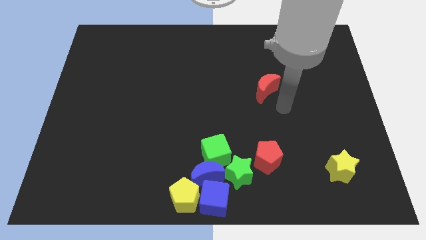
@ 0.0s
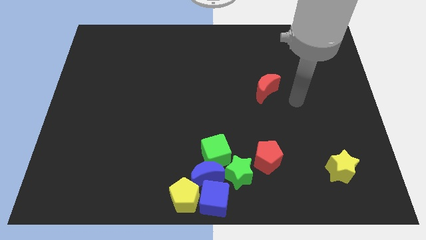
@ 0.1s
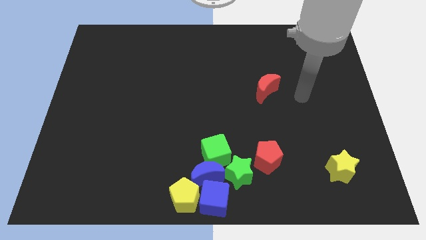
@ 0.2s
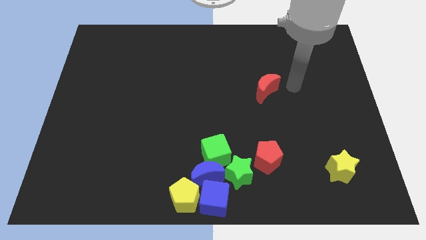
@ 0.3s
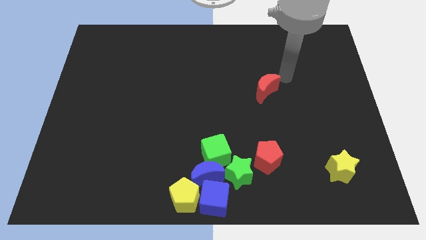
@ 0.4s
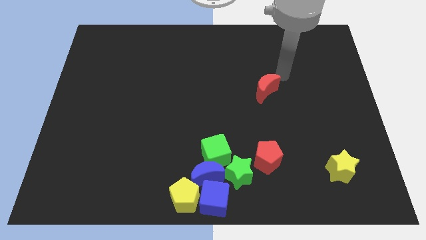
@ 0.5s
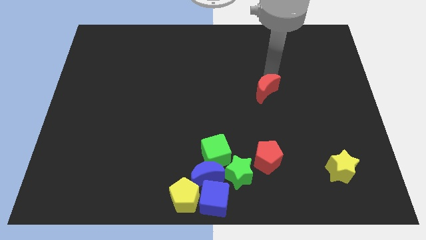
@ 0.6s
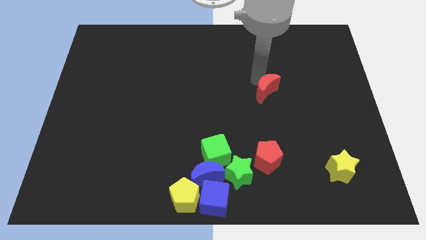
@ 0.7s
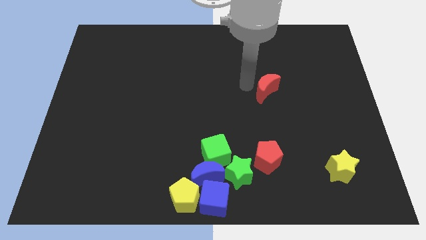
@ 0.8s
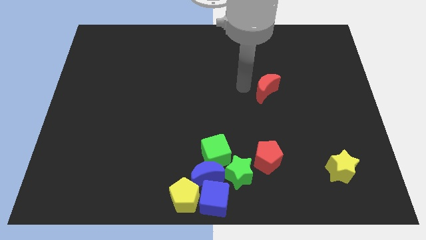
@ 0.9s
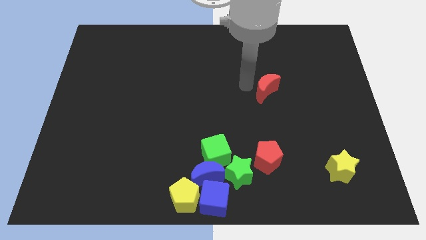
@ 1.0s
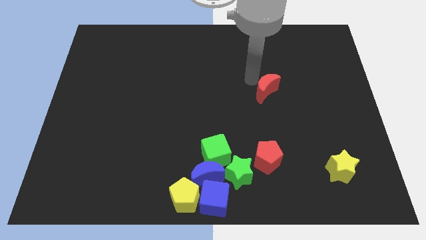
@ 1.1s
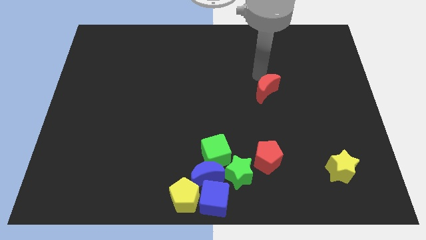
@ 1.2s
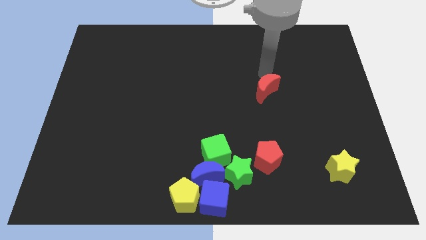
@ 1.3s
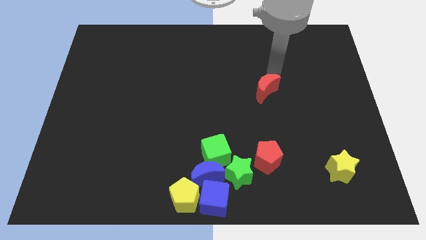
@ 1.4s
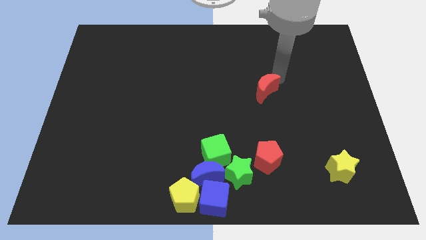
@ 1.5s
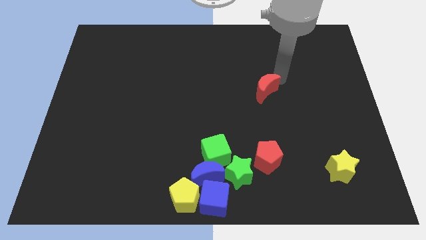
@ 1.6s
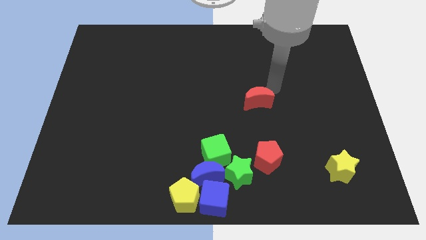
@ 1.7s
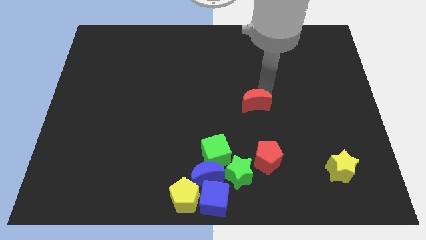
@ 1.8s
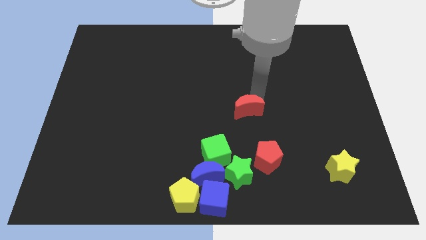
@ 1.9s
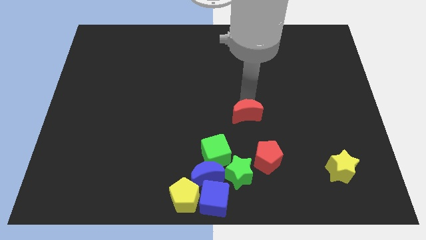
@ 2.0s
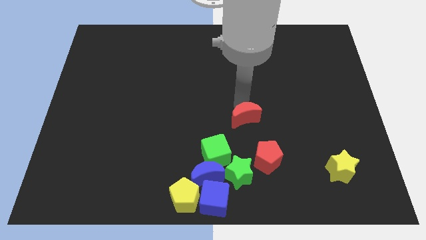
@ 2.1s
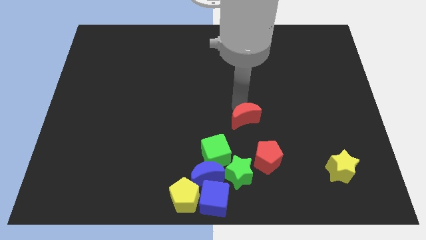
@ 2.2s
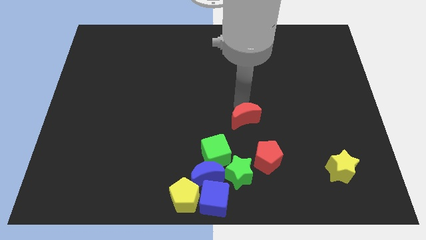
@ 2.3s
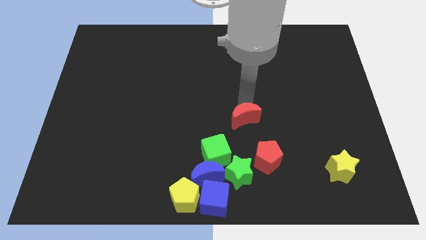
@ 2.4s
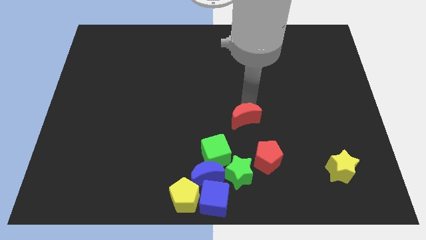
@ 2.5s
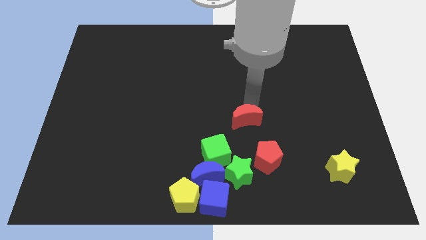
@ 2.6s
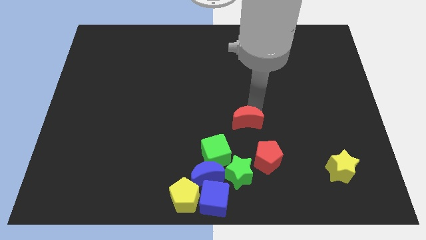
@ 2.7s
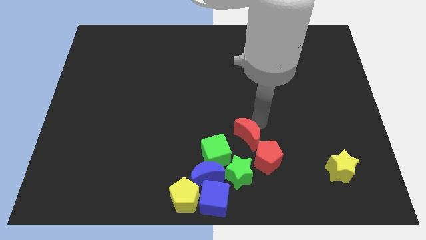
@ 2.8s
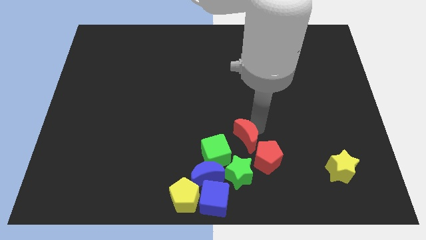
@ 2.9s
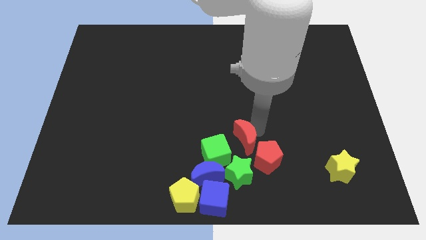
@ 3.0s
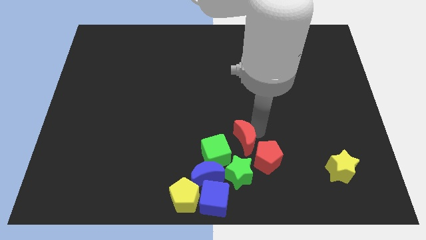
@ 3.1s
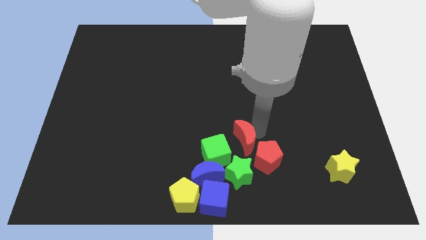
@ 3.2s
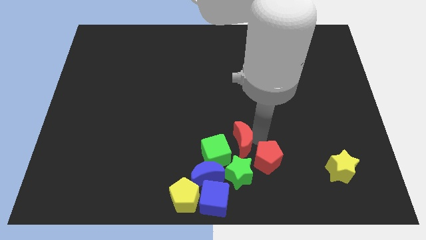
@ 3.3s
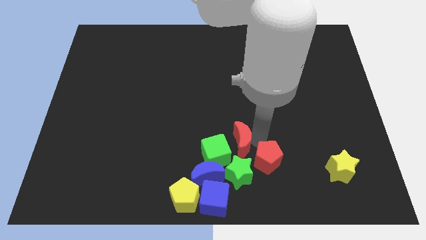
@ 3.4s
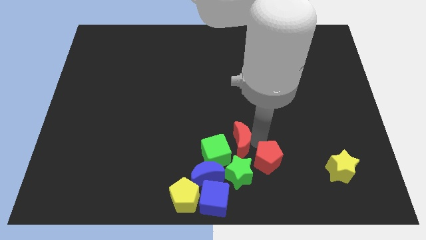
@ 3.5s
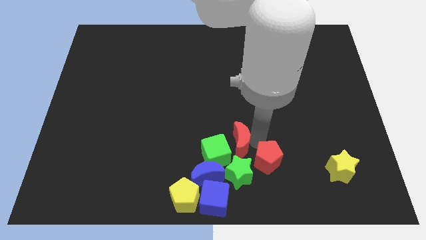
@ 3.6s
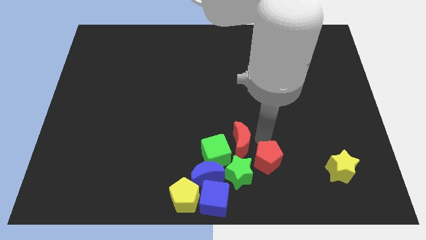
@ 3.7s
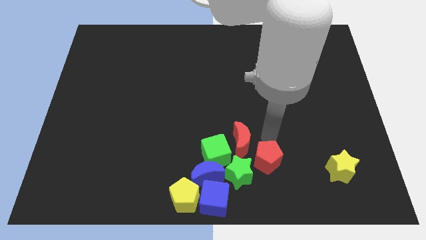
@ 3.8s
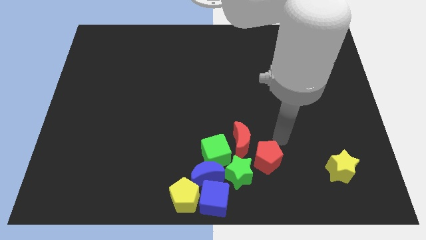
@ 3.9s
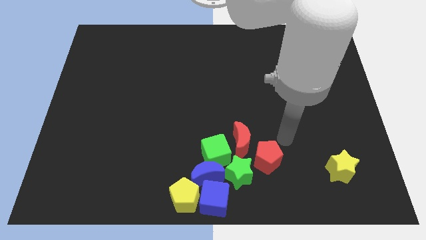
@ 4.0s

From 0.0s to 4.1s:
put the red crescent above the green star

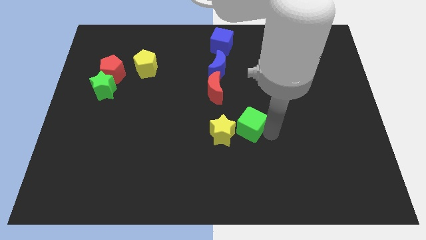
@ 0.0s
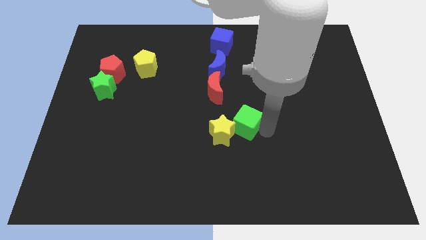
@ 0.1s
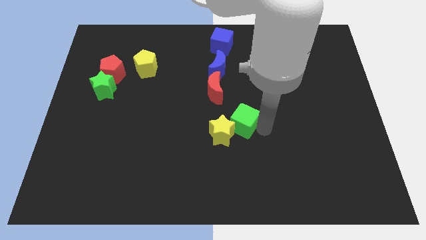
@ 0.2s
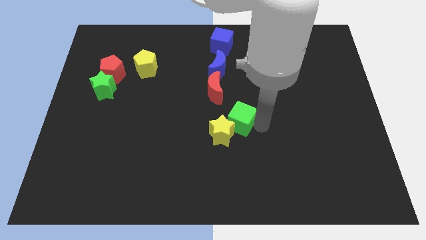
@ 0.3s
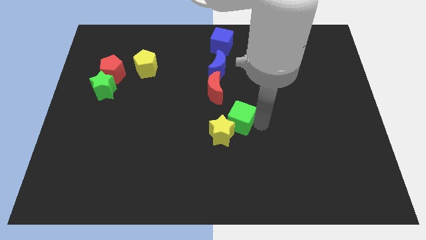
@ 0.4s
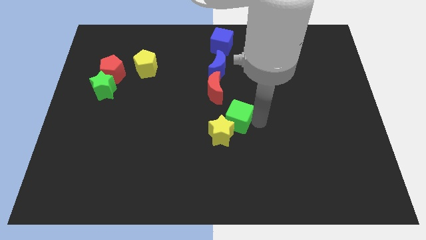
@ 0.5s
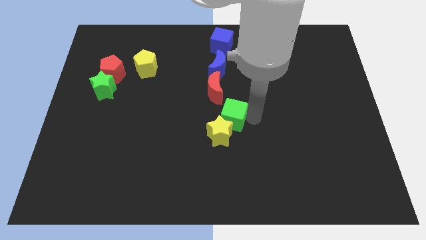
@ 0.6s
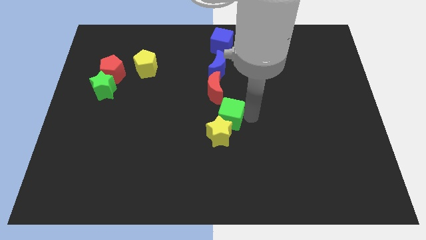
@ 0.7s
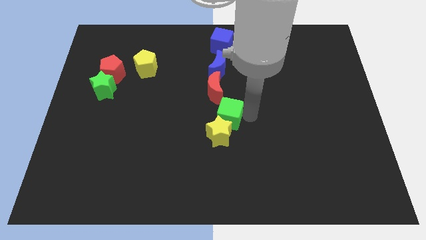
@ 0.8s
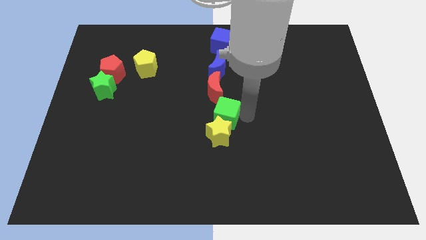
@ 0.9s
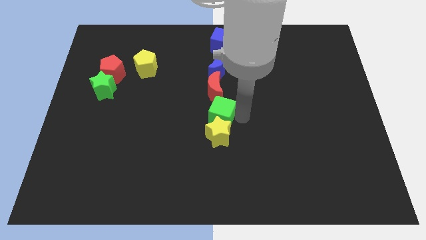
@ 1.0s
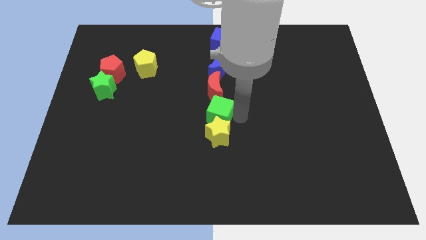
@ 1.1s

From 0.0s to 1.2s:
place green cube above yellow star

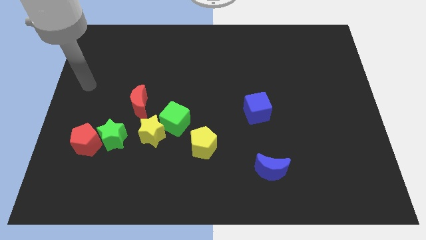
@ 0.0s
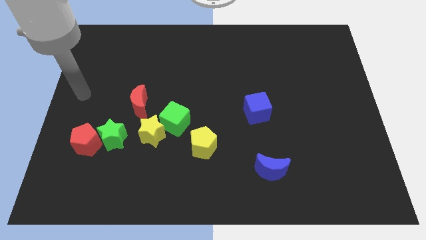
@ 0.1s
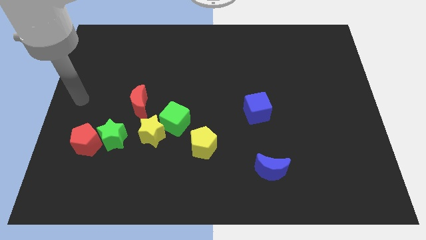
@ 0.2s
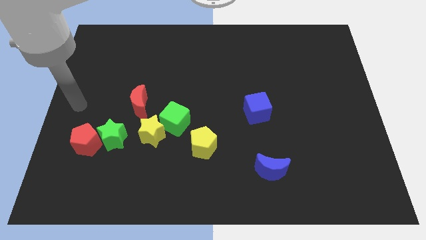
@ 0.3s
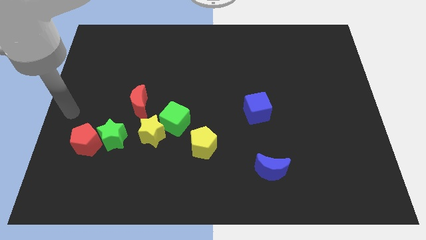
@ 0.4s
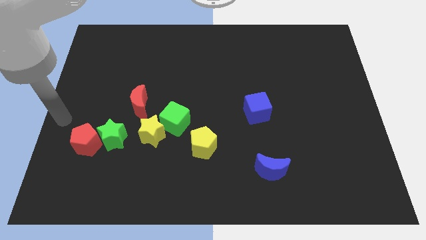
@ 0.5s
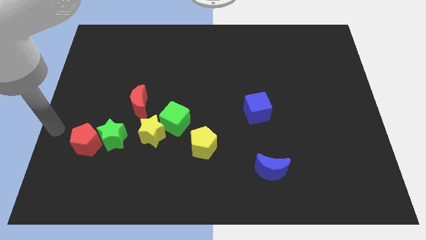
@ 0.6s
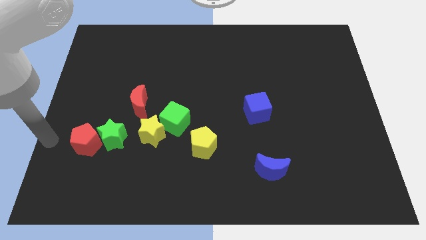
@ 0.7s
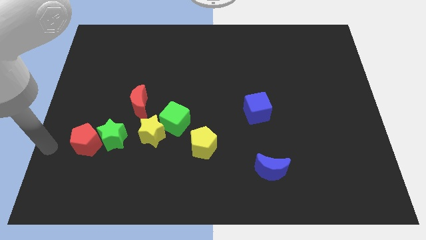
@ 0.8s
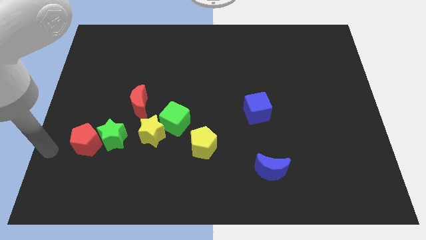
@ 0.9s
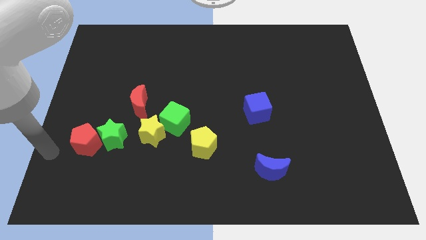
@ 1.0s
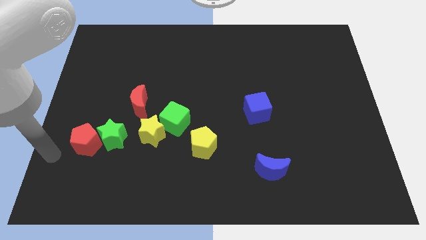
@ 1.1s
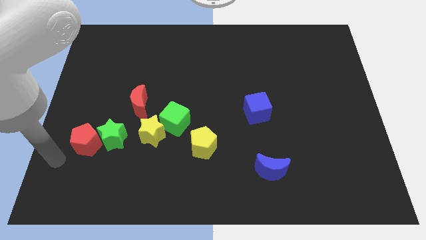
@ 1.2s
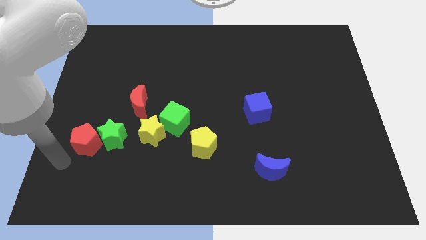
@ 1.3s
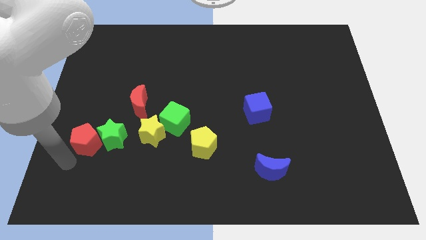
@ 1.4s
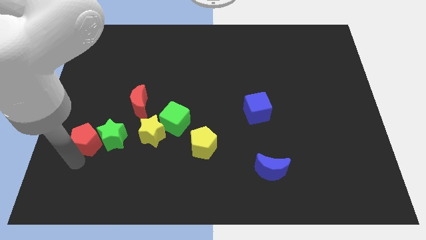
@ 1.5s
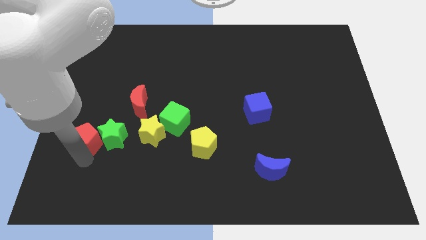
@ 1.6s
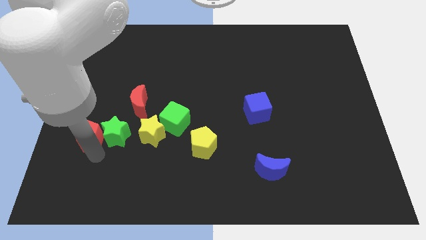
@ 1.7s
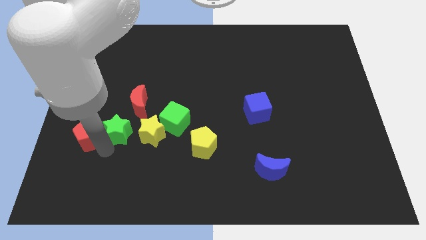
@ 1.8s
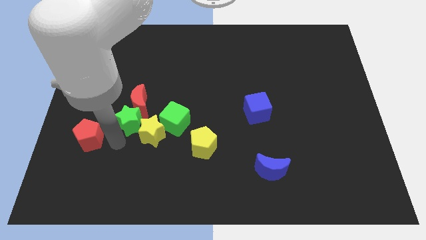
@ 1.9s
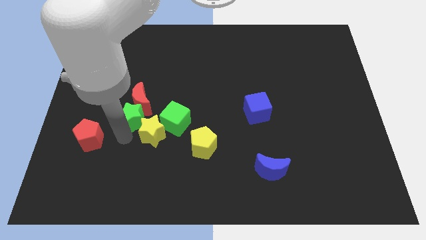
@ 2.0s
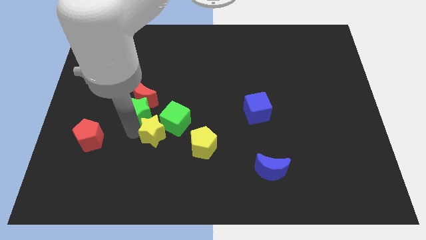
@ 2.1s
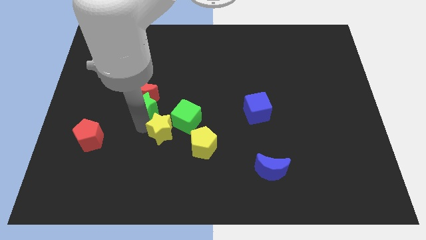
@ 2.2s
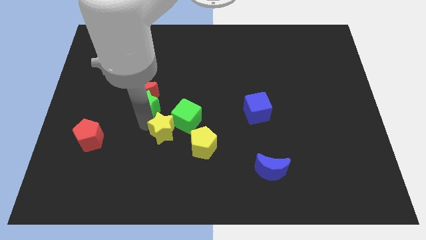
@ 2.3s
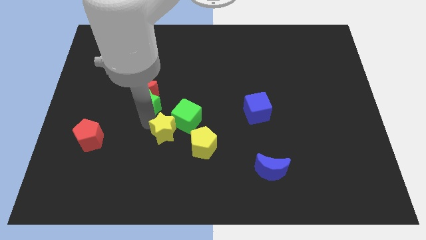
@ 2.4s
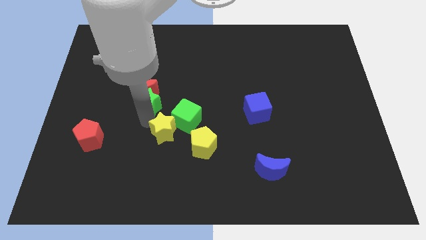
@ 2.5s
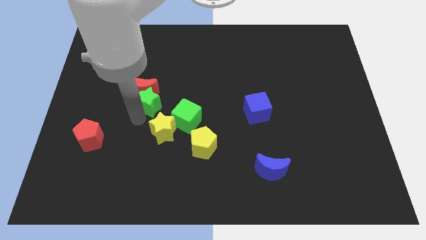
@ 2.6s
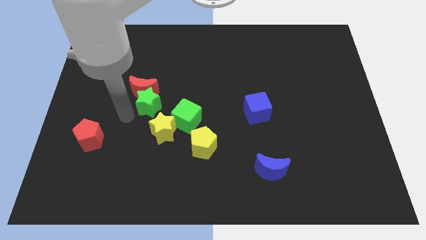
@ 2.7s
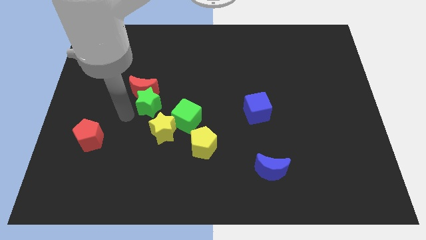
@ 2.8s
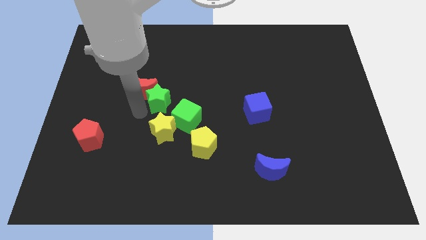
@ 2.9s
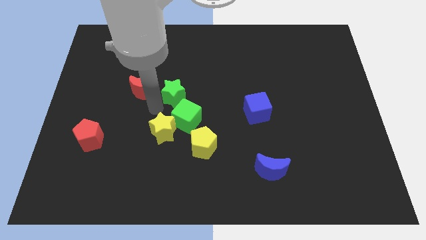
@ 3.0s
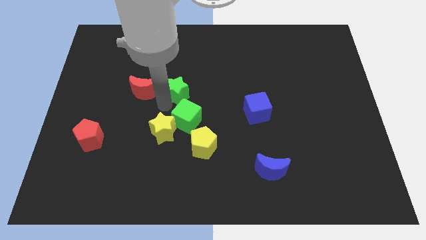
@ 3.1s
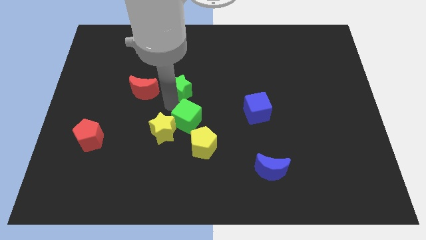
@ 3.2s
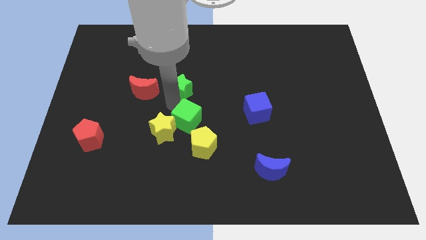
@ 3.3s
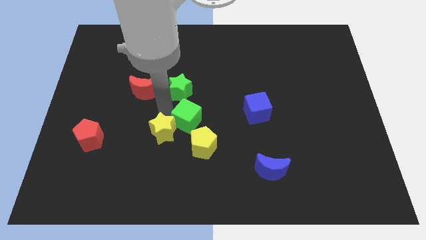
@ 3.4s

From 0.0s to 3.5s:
place the green star above the green cube
